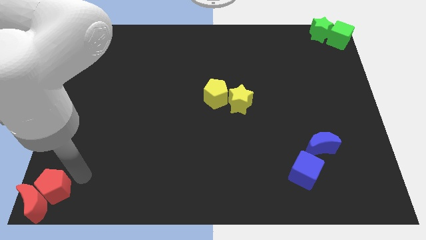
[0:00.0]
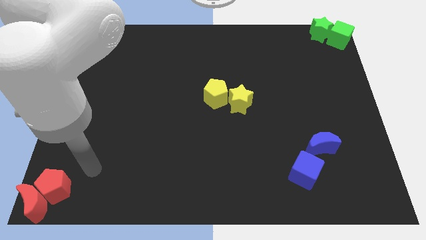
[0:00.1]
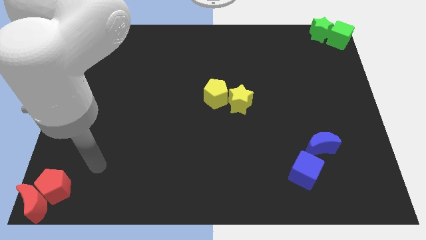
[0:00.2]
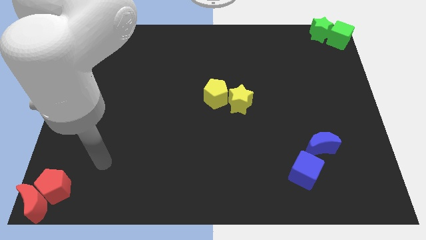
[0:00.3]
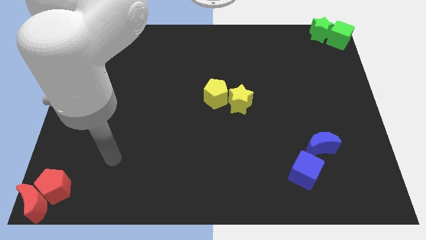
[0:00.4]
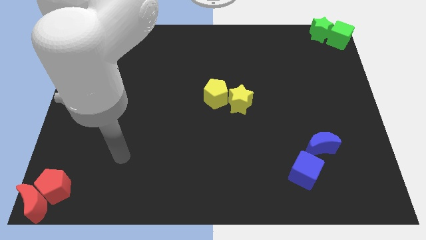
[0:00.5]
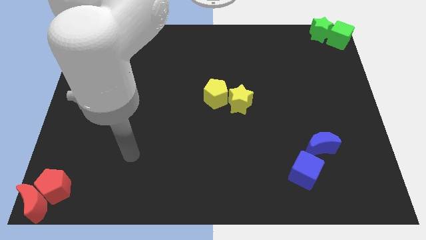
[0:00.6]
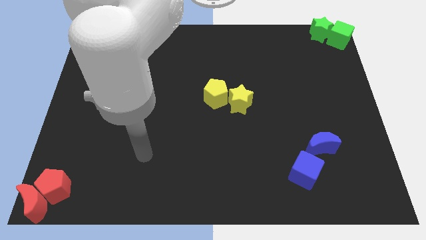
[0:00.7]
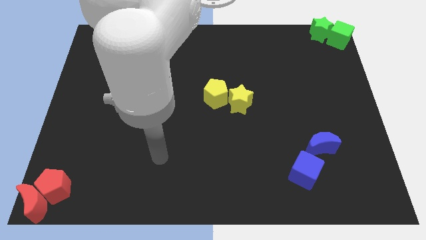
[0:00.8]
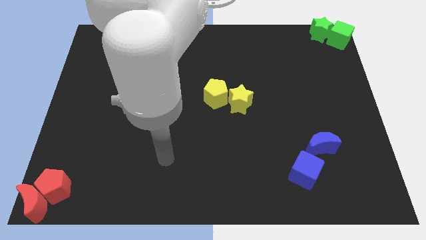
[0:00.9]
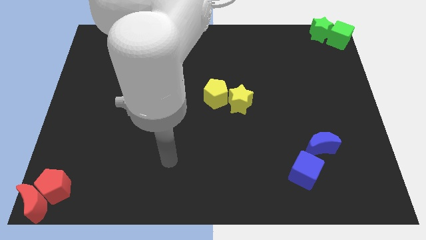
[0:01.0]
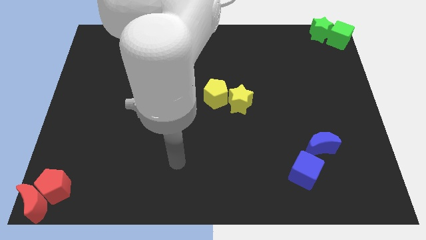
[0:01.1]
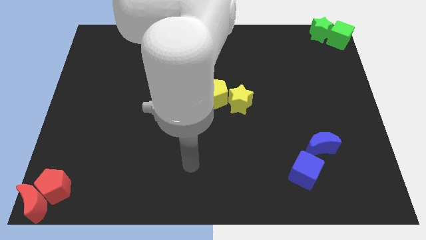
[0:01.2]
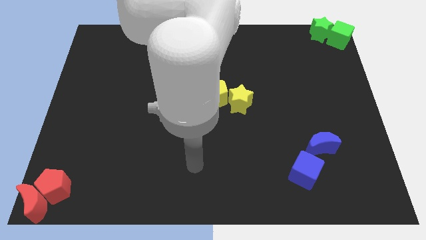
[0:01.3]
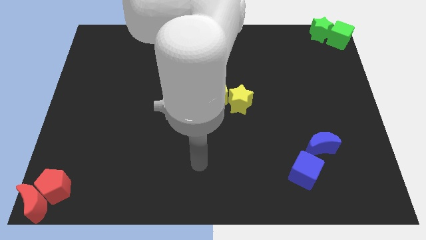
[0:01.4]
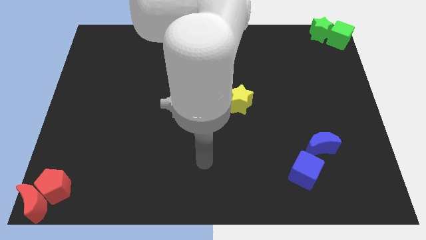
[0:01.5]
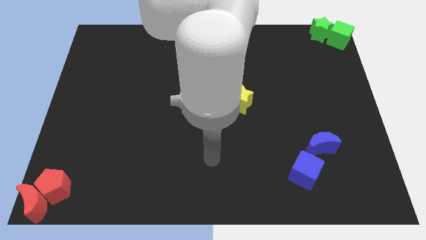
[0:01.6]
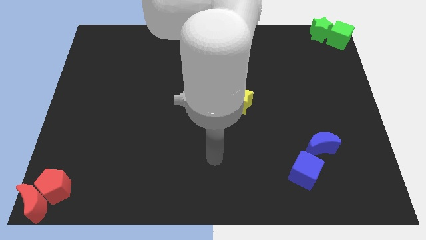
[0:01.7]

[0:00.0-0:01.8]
move the arm away from the red blocks

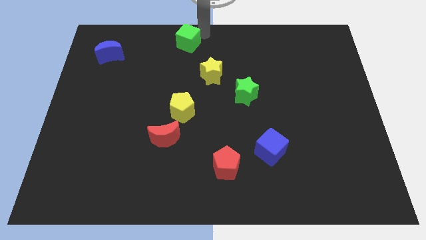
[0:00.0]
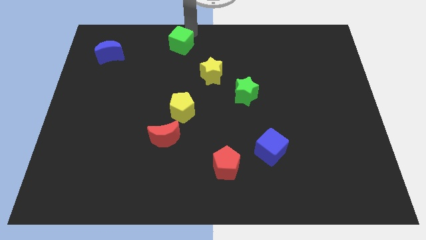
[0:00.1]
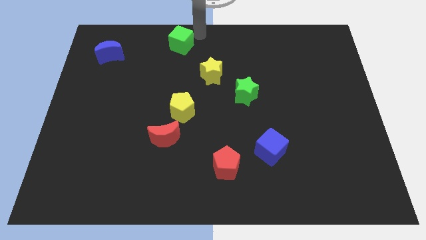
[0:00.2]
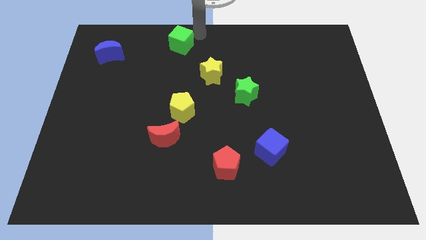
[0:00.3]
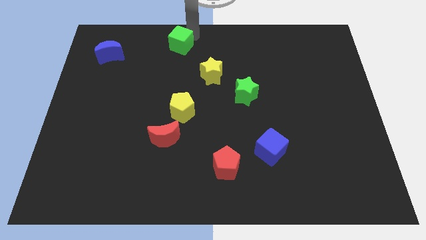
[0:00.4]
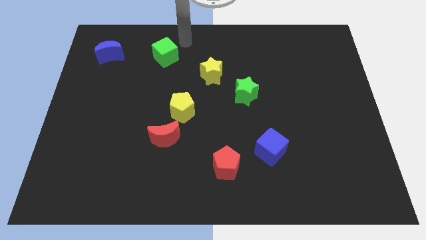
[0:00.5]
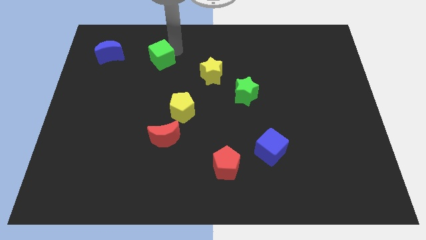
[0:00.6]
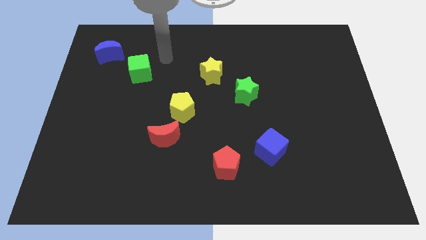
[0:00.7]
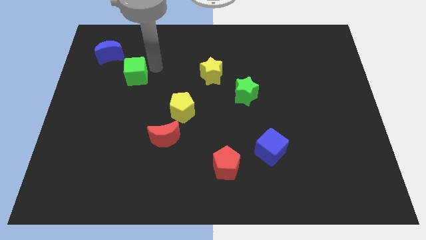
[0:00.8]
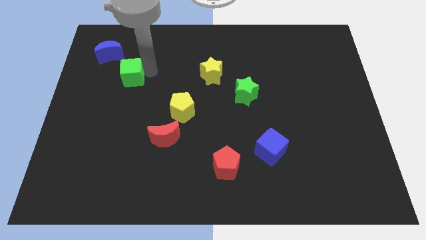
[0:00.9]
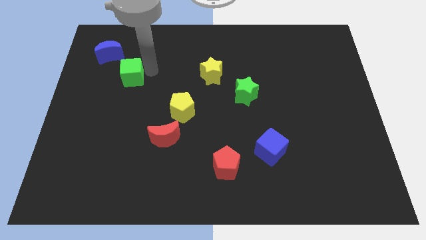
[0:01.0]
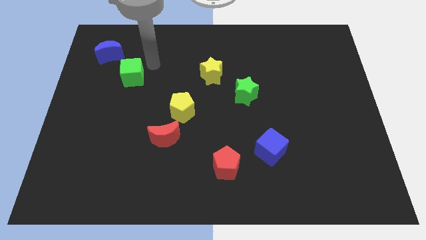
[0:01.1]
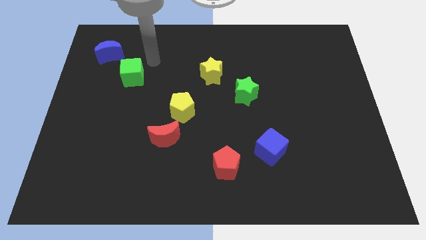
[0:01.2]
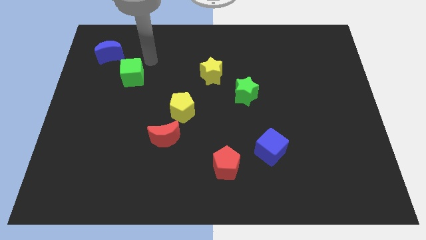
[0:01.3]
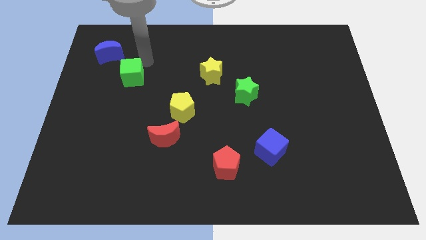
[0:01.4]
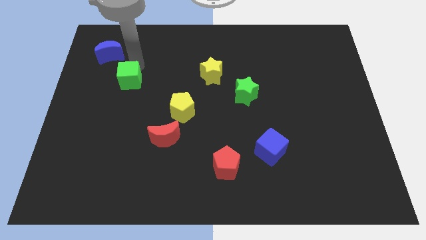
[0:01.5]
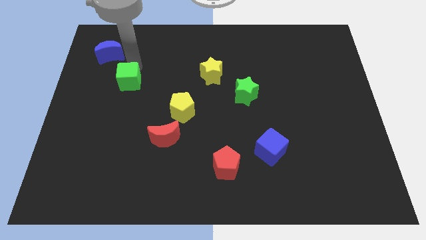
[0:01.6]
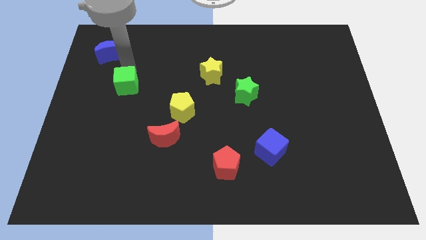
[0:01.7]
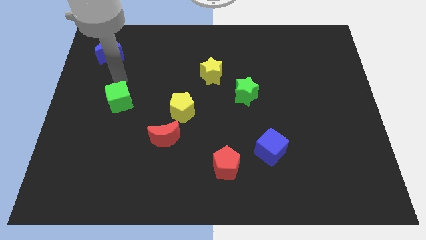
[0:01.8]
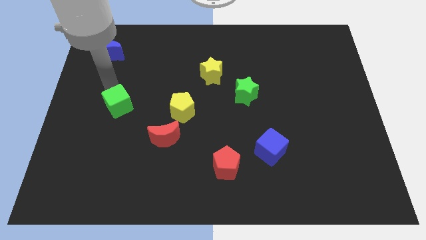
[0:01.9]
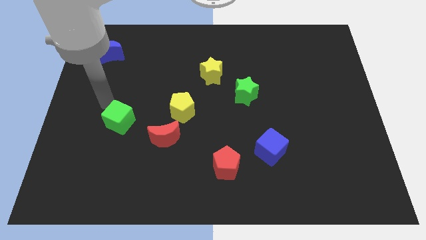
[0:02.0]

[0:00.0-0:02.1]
place green cube to the left of yellow pentagon

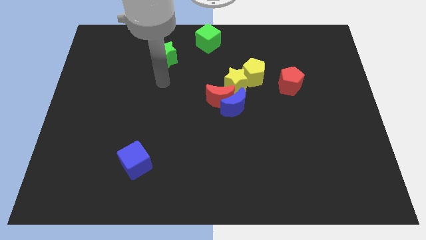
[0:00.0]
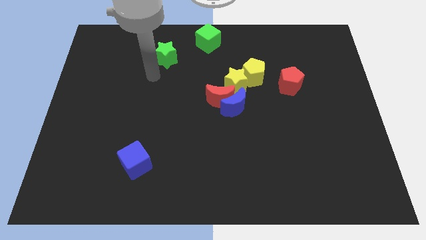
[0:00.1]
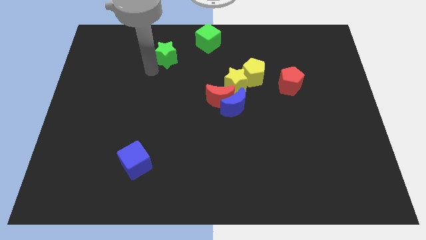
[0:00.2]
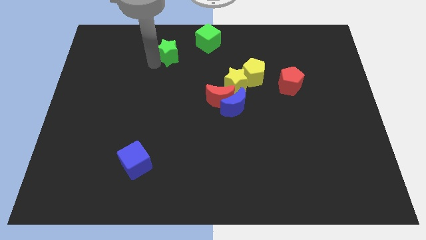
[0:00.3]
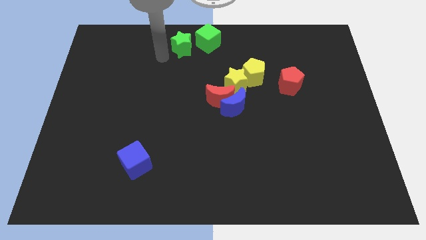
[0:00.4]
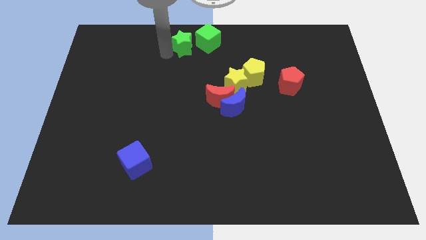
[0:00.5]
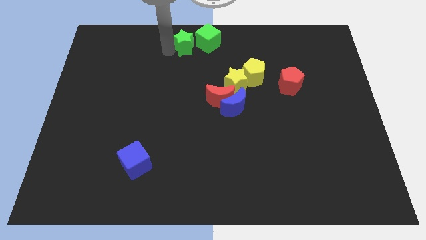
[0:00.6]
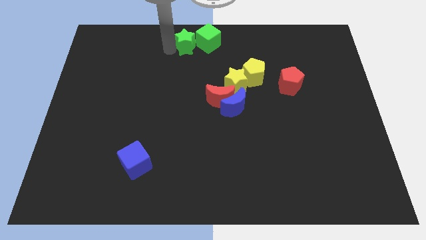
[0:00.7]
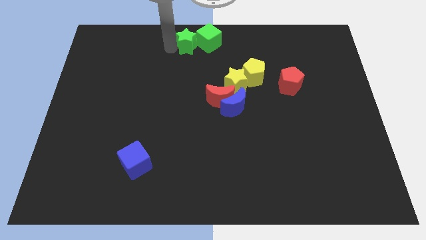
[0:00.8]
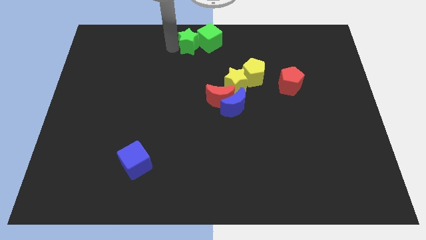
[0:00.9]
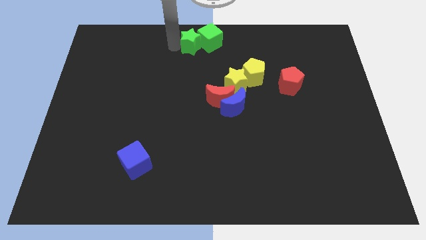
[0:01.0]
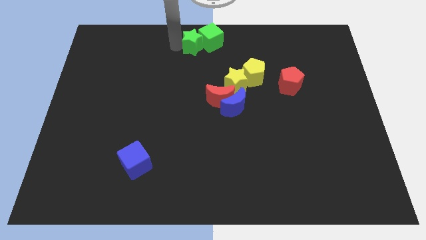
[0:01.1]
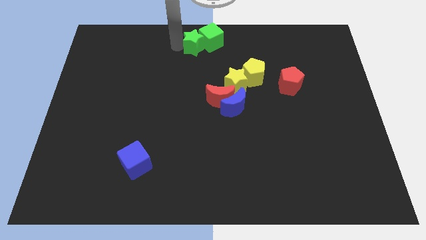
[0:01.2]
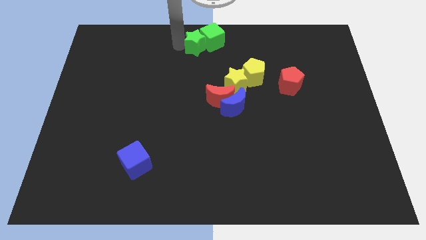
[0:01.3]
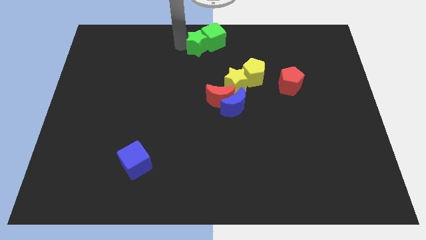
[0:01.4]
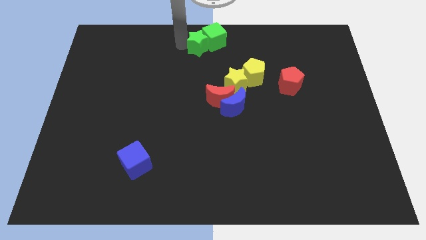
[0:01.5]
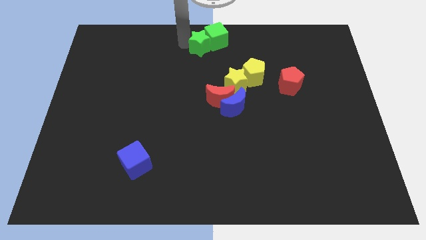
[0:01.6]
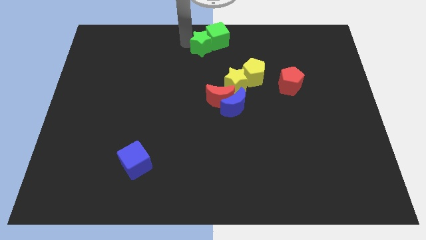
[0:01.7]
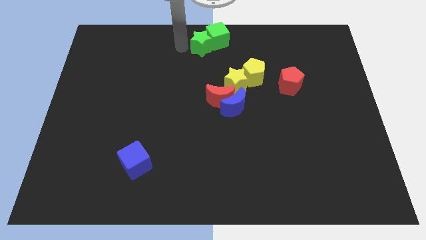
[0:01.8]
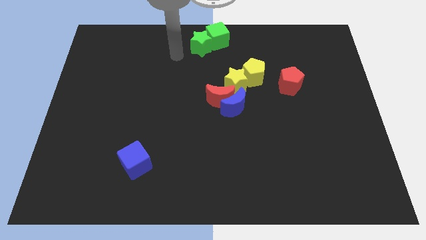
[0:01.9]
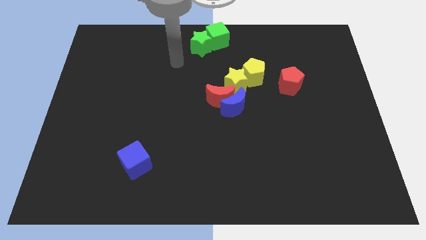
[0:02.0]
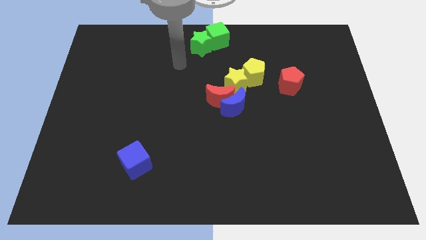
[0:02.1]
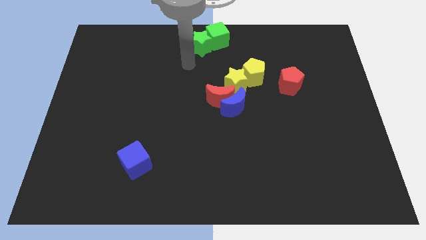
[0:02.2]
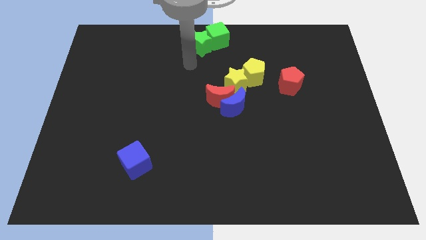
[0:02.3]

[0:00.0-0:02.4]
move the green star into the green cube

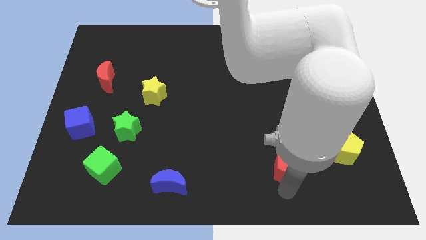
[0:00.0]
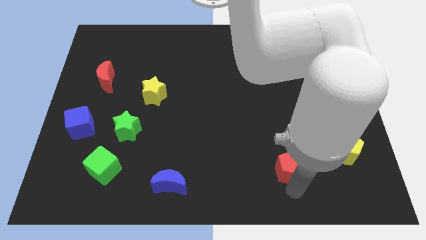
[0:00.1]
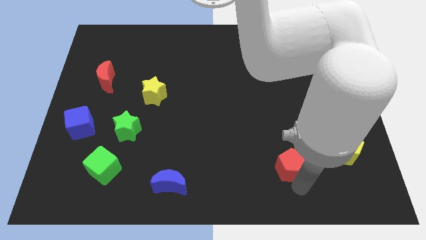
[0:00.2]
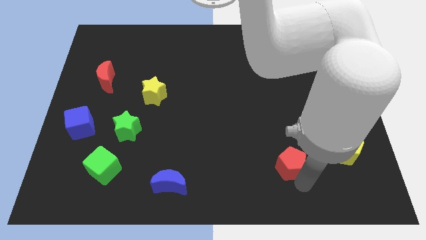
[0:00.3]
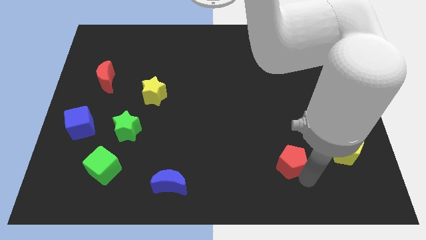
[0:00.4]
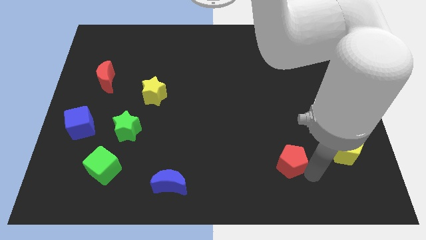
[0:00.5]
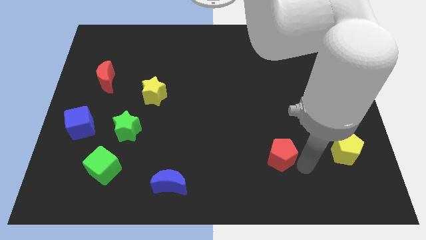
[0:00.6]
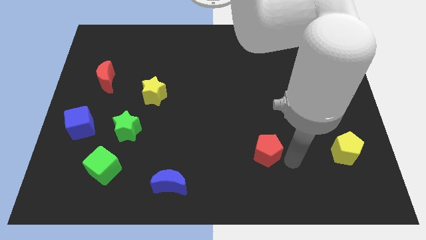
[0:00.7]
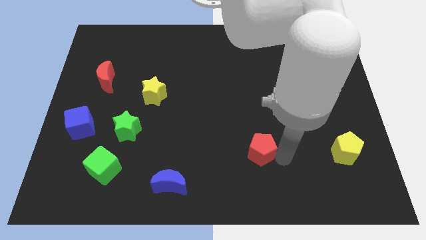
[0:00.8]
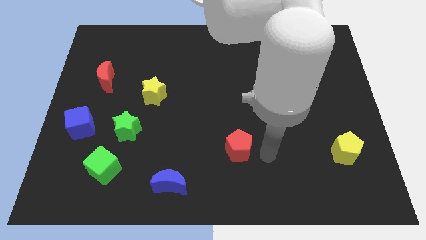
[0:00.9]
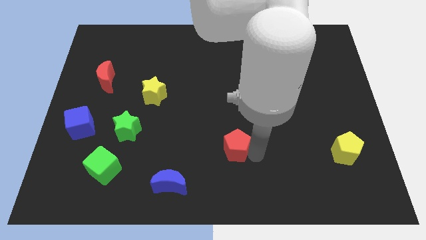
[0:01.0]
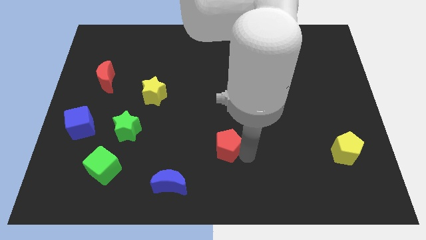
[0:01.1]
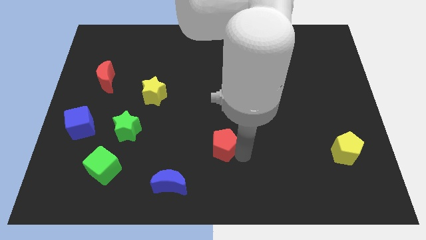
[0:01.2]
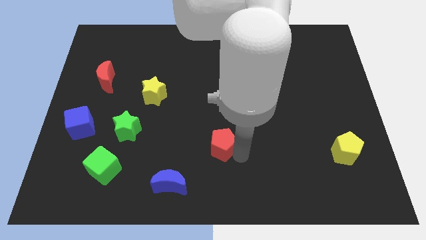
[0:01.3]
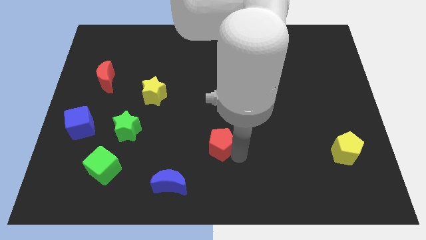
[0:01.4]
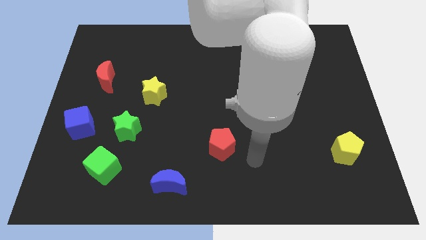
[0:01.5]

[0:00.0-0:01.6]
slide the red pentagon horizontally to the left side of the yellow pentagon

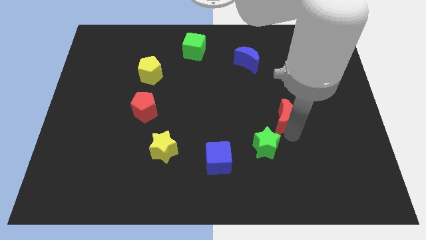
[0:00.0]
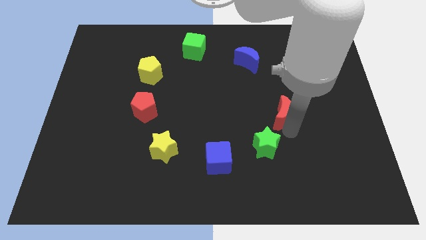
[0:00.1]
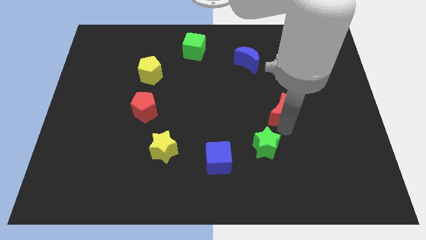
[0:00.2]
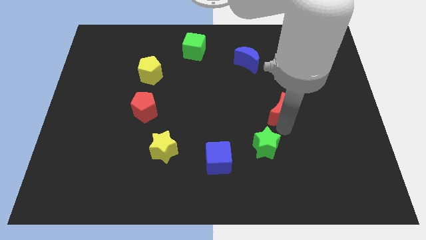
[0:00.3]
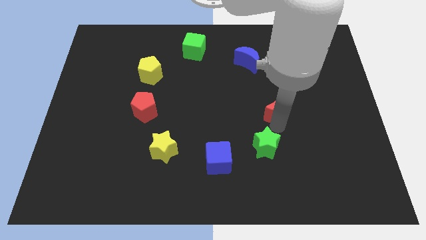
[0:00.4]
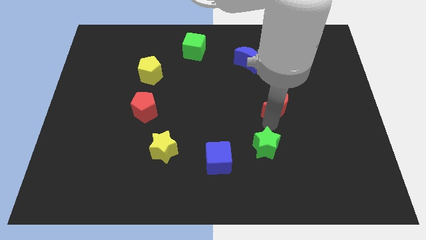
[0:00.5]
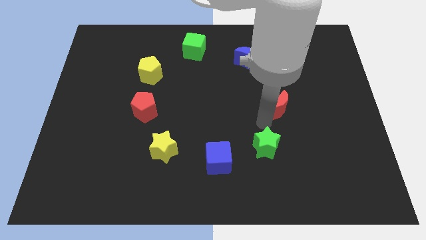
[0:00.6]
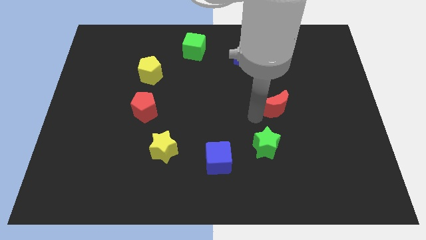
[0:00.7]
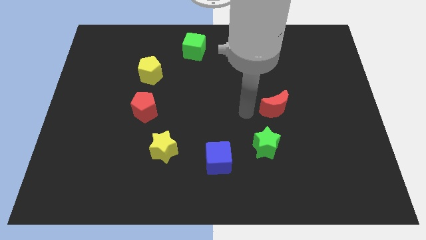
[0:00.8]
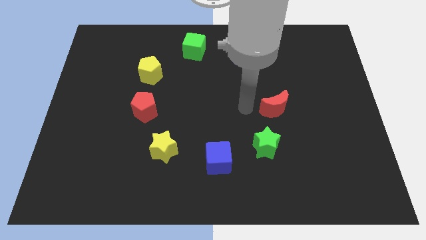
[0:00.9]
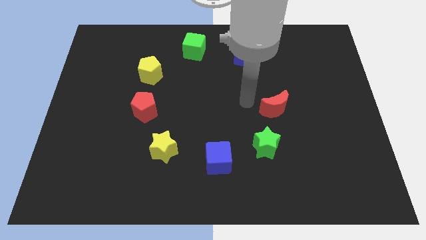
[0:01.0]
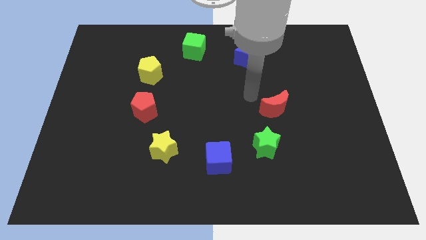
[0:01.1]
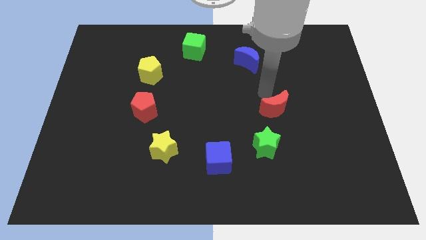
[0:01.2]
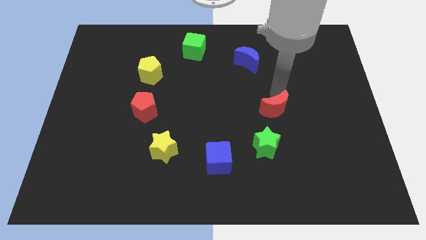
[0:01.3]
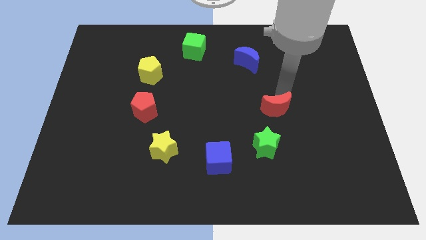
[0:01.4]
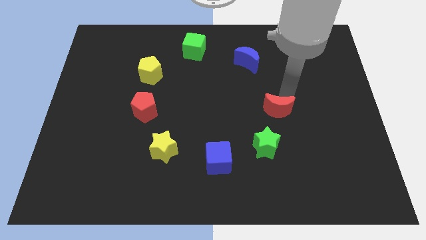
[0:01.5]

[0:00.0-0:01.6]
place the red moon parallel to red pentagon
